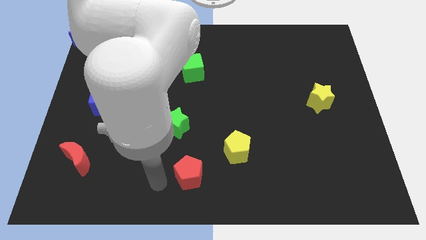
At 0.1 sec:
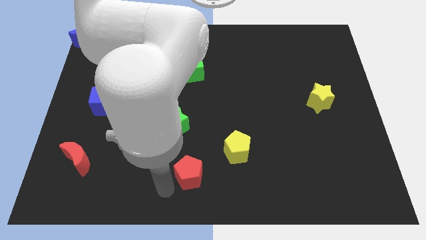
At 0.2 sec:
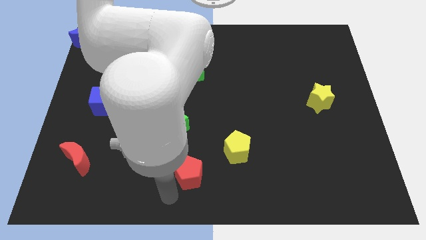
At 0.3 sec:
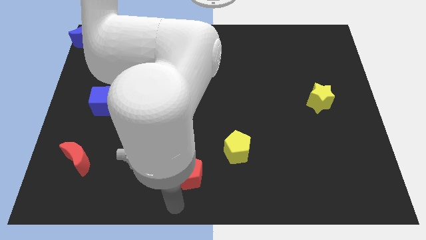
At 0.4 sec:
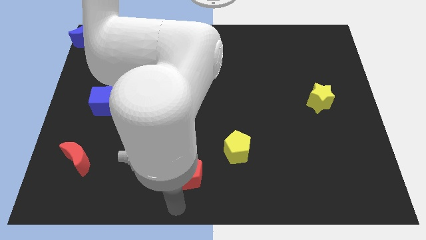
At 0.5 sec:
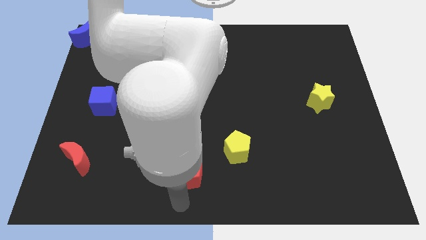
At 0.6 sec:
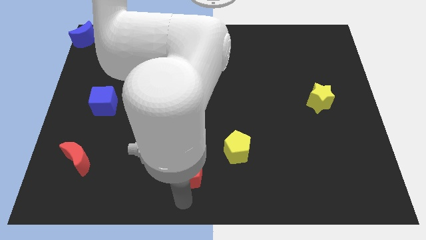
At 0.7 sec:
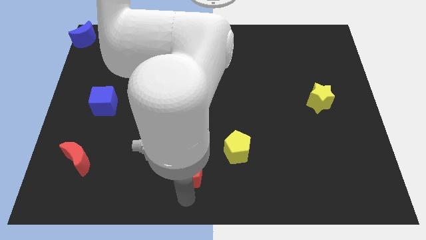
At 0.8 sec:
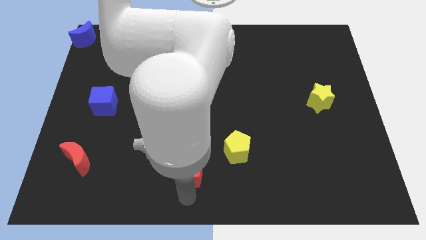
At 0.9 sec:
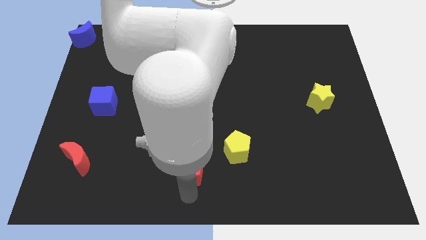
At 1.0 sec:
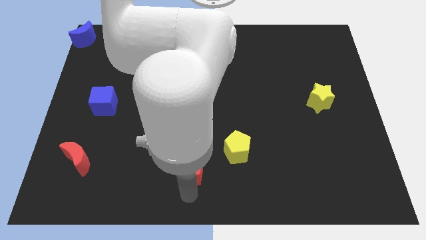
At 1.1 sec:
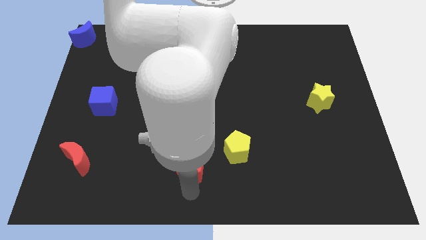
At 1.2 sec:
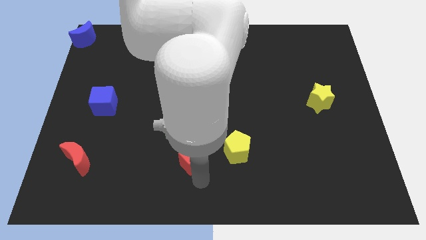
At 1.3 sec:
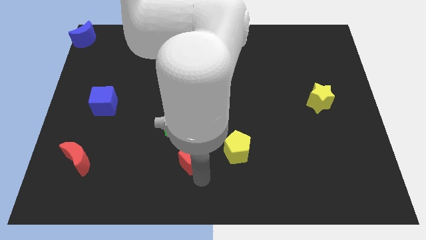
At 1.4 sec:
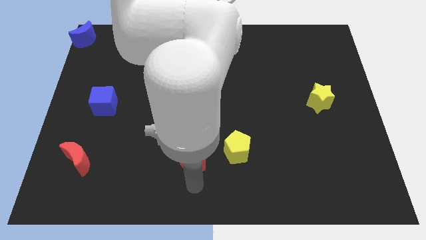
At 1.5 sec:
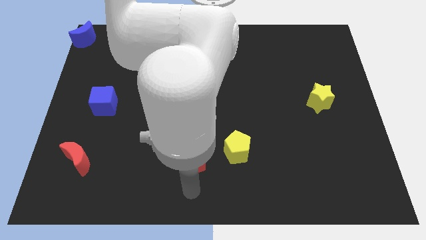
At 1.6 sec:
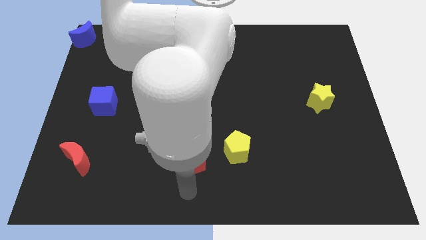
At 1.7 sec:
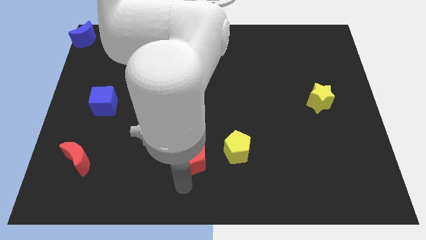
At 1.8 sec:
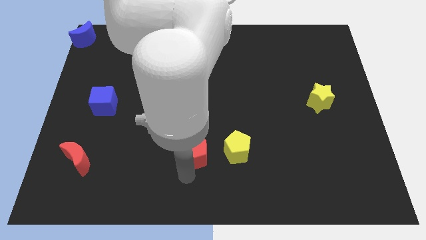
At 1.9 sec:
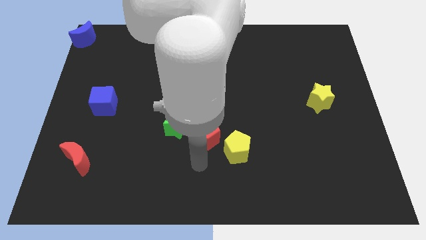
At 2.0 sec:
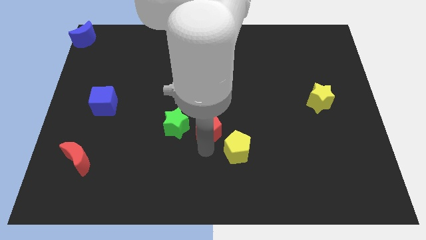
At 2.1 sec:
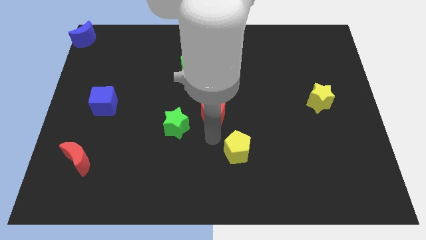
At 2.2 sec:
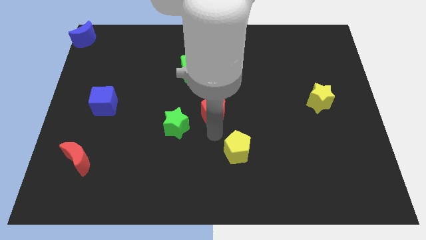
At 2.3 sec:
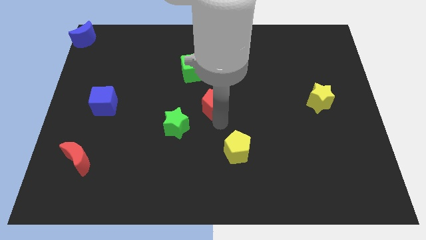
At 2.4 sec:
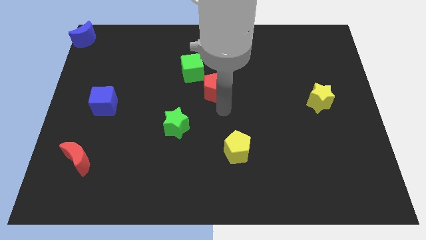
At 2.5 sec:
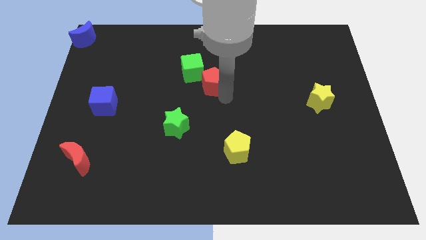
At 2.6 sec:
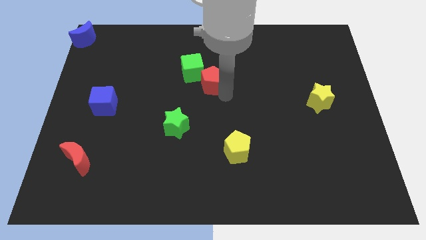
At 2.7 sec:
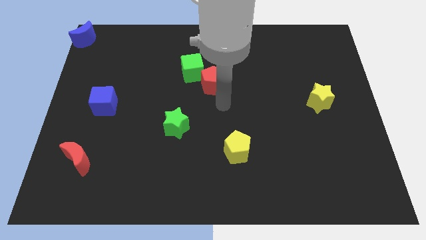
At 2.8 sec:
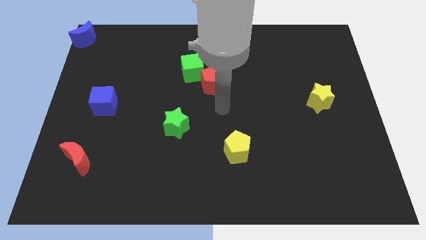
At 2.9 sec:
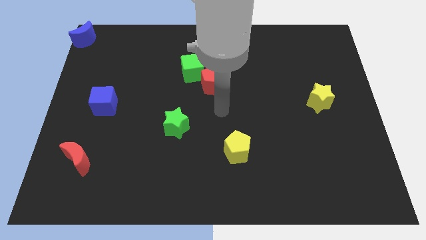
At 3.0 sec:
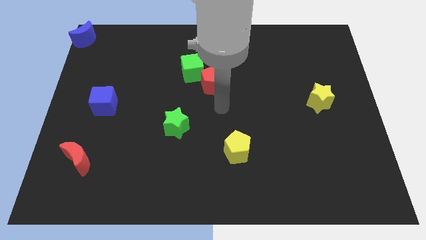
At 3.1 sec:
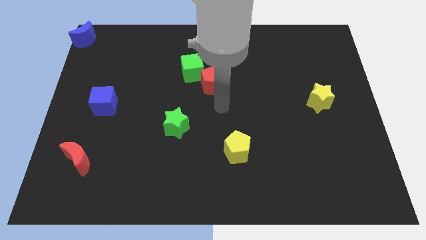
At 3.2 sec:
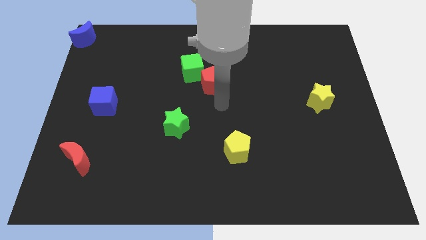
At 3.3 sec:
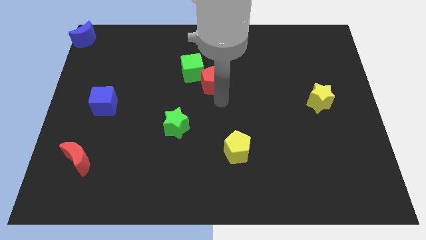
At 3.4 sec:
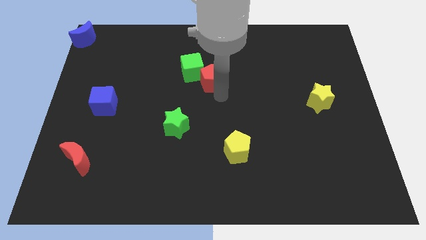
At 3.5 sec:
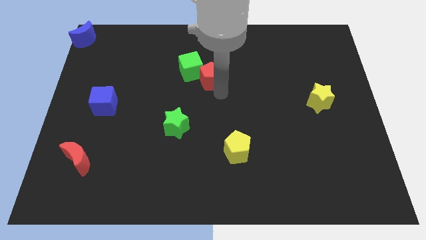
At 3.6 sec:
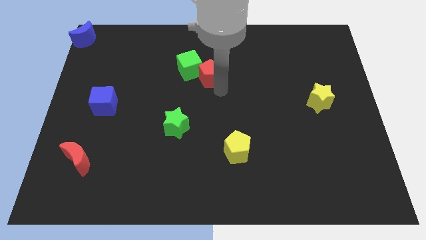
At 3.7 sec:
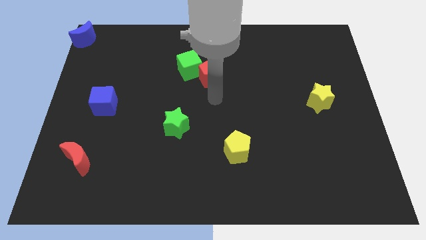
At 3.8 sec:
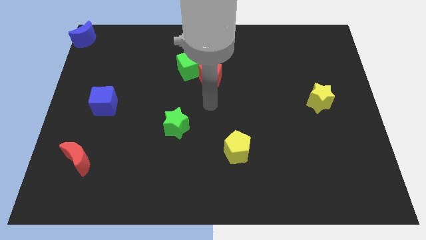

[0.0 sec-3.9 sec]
push the red pentagon into the green cube

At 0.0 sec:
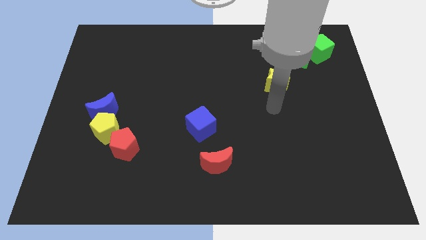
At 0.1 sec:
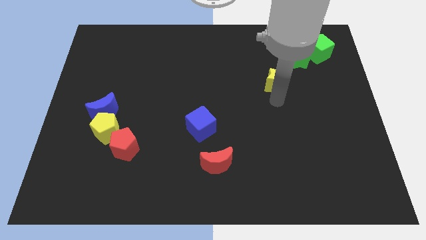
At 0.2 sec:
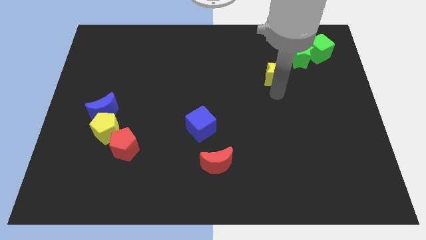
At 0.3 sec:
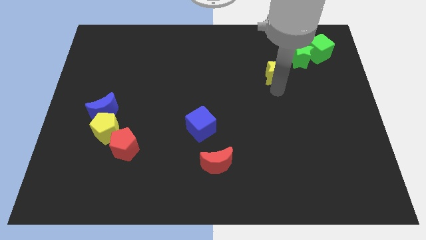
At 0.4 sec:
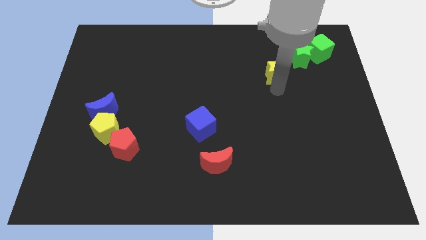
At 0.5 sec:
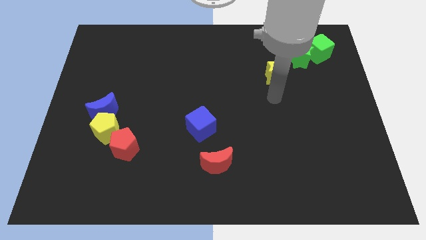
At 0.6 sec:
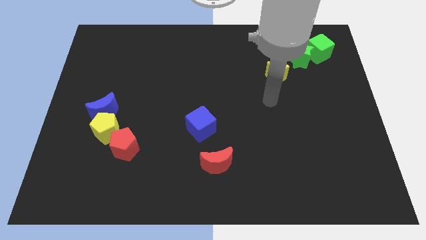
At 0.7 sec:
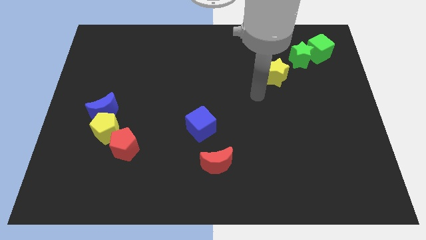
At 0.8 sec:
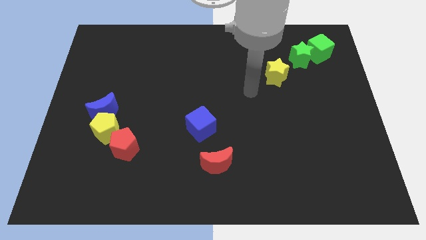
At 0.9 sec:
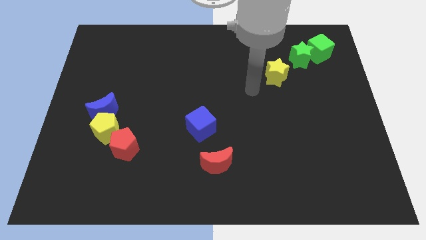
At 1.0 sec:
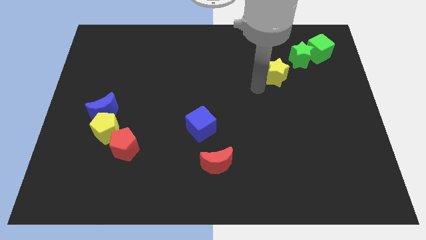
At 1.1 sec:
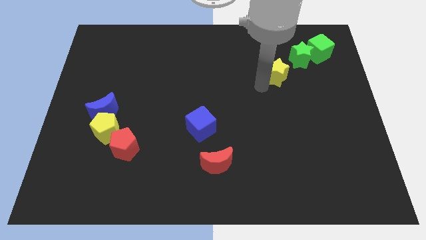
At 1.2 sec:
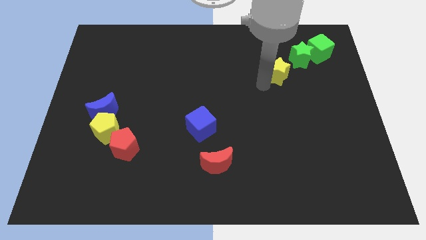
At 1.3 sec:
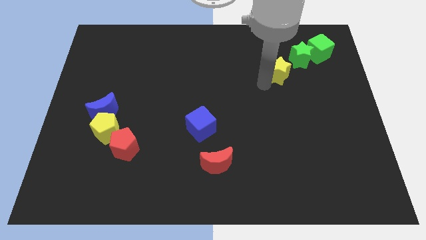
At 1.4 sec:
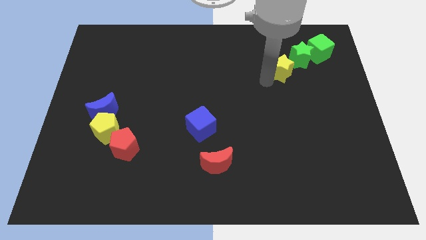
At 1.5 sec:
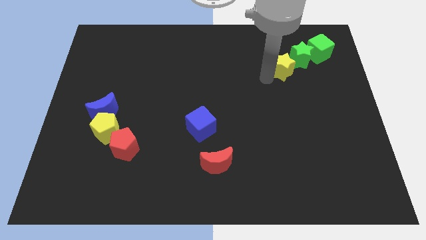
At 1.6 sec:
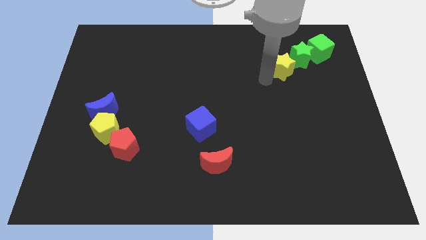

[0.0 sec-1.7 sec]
place the yellow star towards the bottom left of the green star

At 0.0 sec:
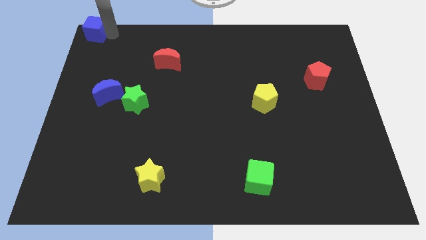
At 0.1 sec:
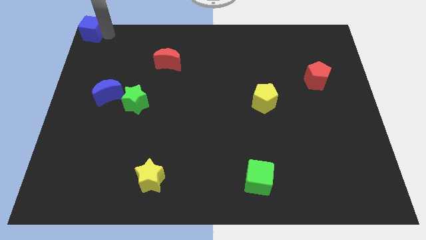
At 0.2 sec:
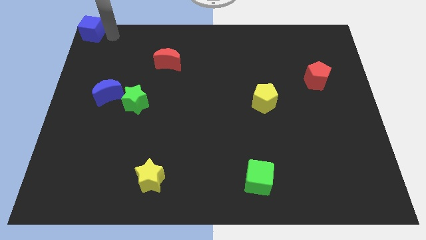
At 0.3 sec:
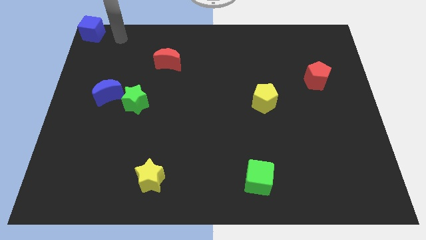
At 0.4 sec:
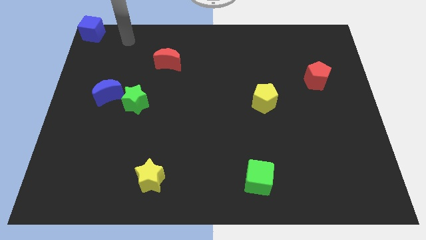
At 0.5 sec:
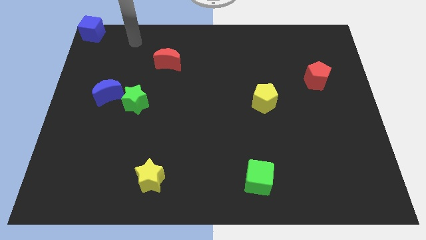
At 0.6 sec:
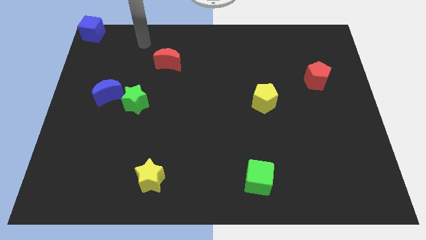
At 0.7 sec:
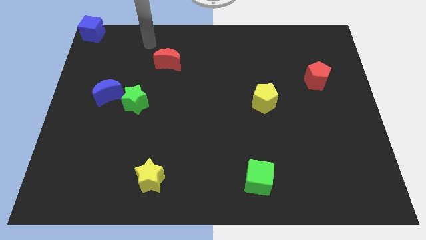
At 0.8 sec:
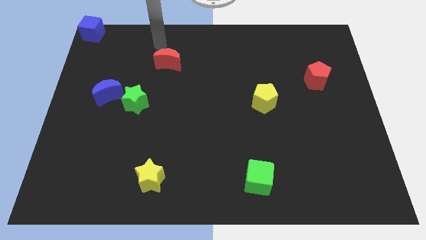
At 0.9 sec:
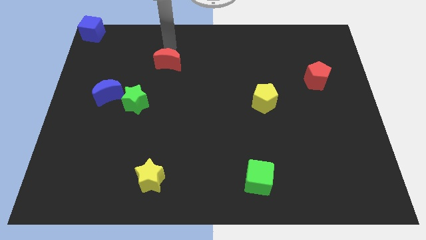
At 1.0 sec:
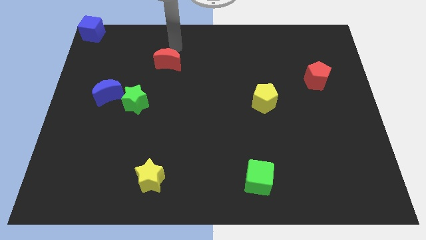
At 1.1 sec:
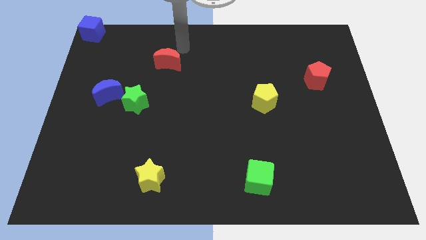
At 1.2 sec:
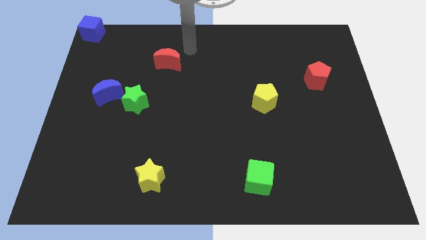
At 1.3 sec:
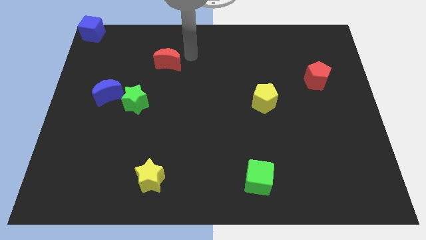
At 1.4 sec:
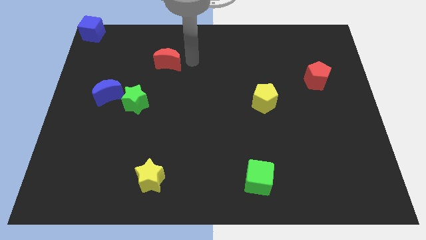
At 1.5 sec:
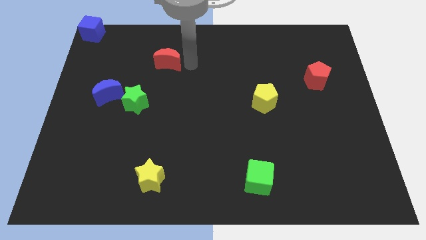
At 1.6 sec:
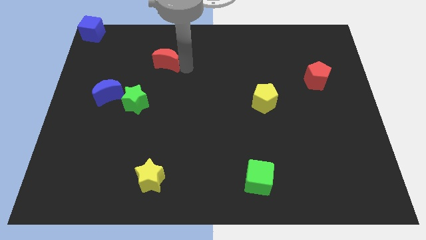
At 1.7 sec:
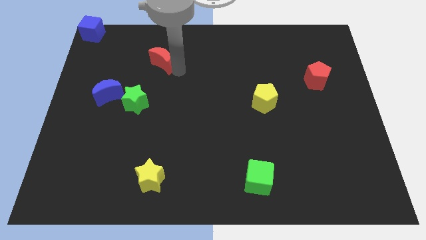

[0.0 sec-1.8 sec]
move your arm towards the red moon crescent

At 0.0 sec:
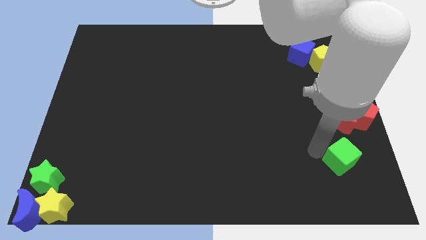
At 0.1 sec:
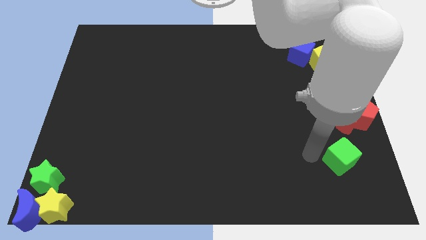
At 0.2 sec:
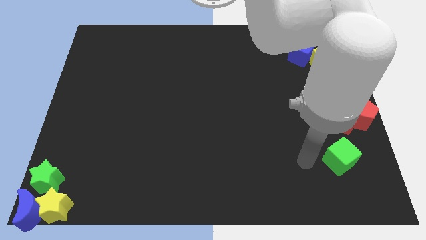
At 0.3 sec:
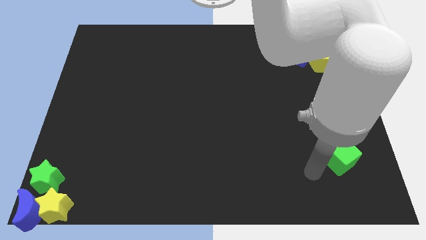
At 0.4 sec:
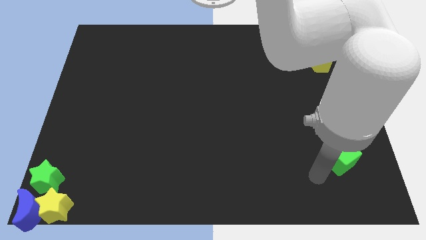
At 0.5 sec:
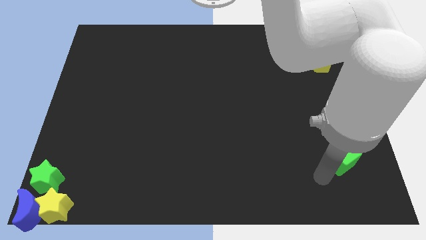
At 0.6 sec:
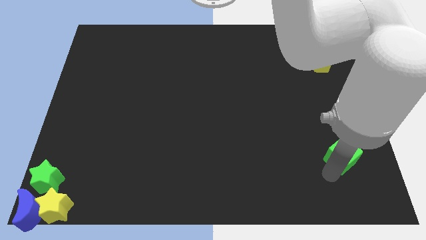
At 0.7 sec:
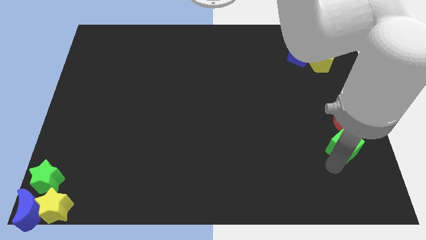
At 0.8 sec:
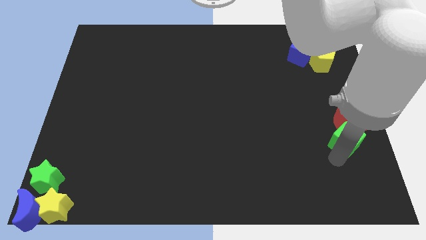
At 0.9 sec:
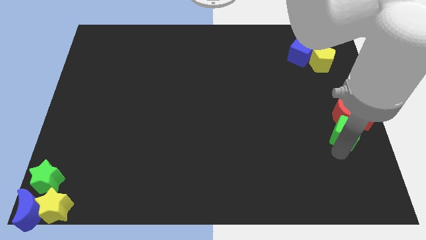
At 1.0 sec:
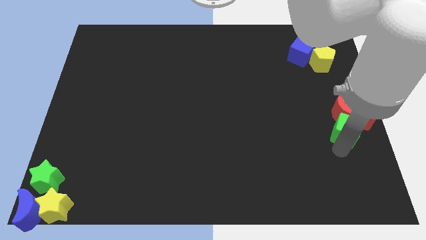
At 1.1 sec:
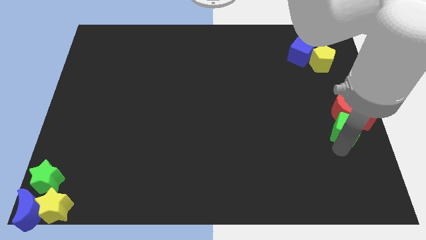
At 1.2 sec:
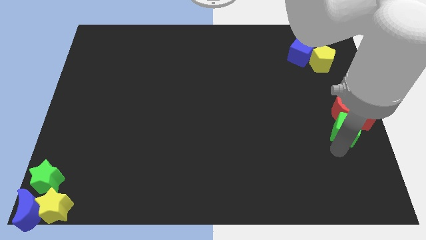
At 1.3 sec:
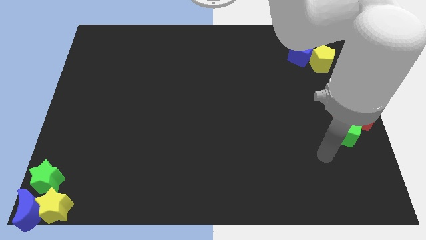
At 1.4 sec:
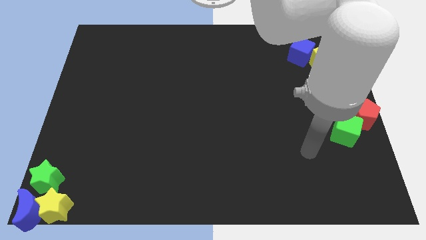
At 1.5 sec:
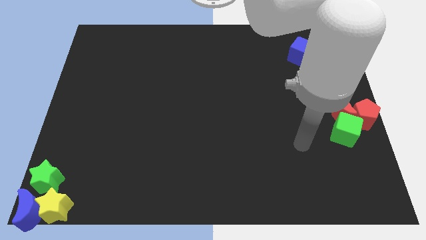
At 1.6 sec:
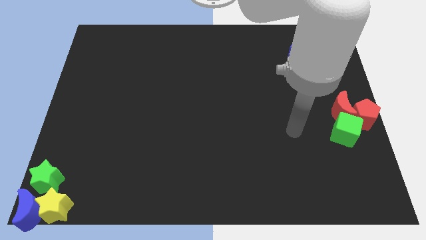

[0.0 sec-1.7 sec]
place green cube below the red moon
